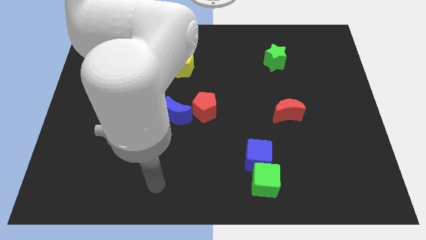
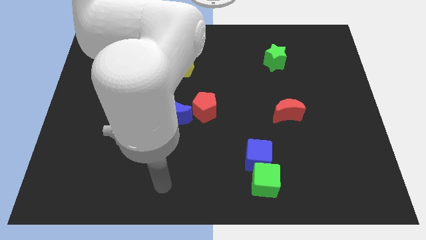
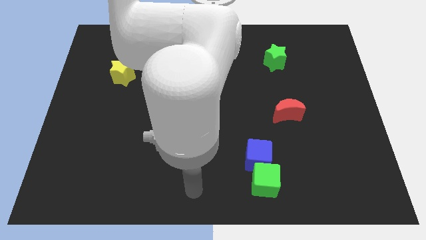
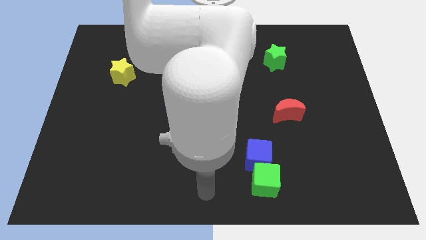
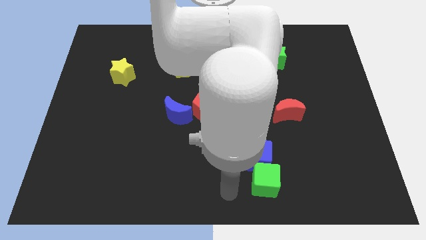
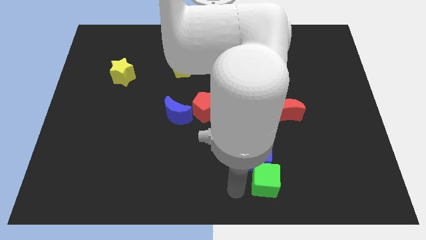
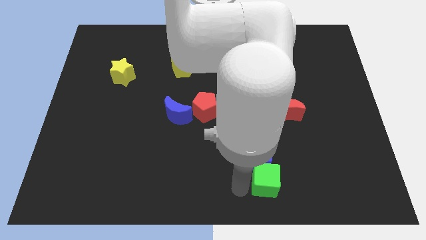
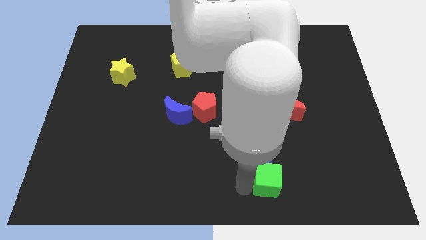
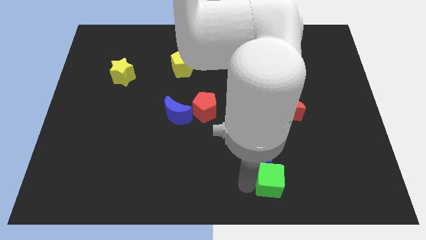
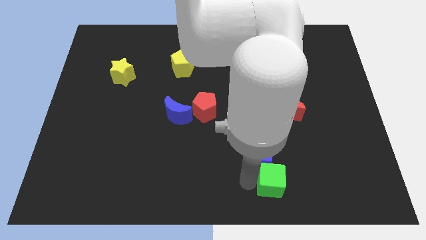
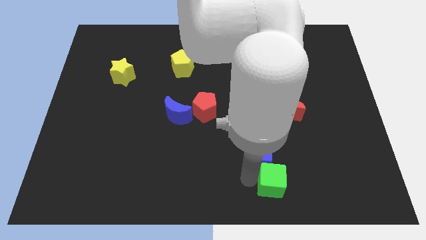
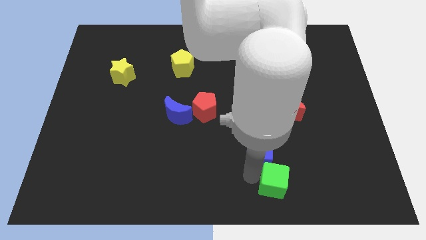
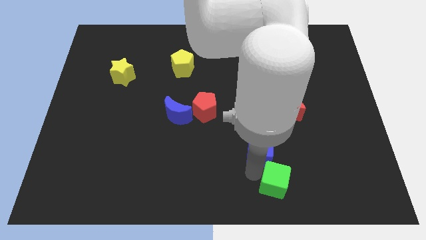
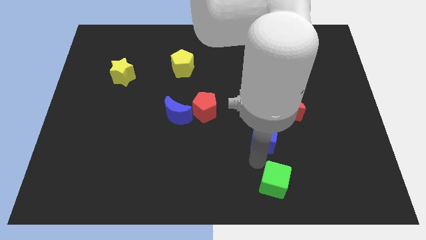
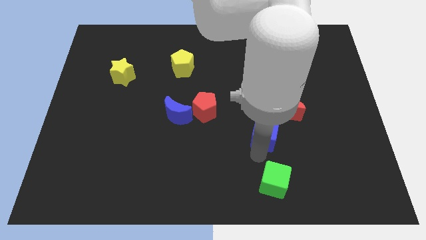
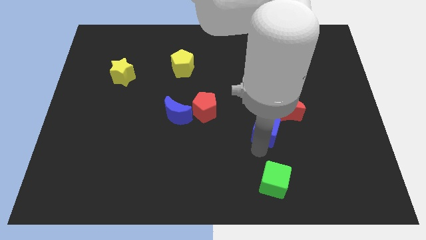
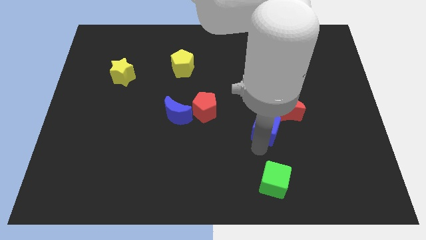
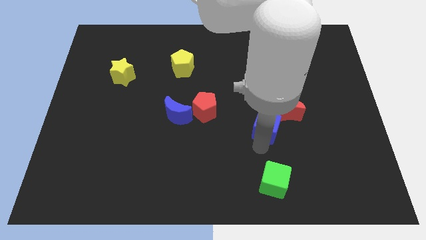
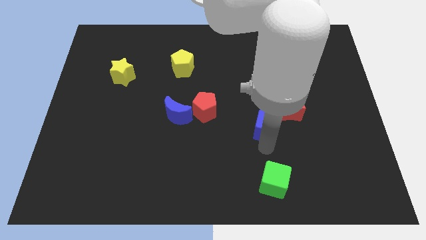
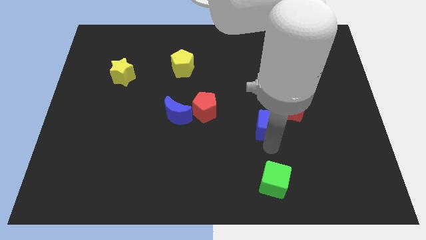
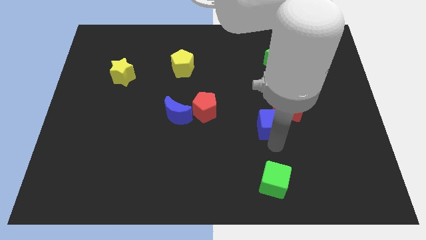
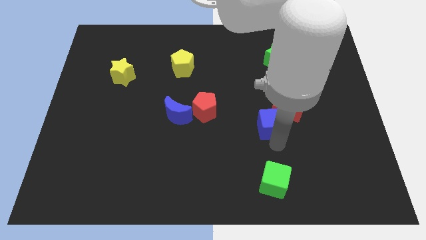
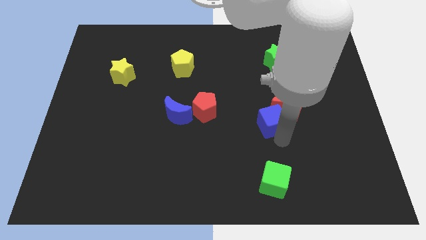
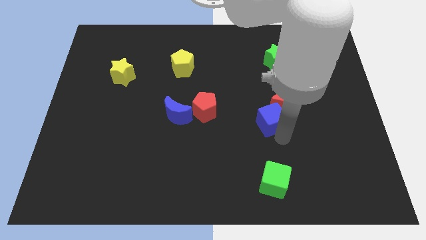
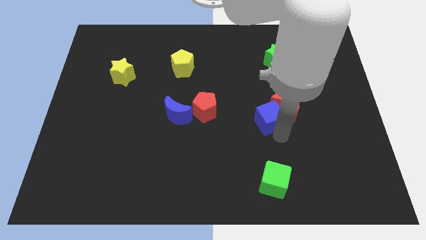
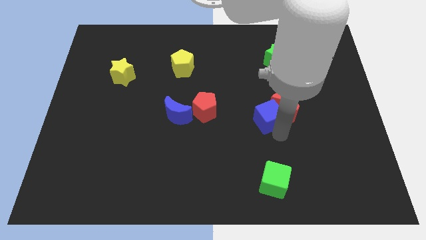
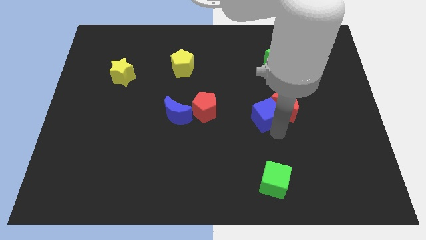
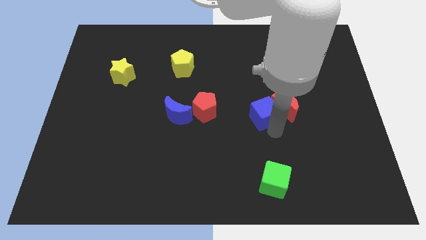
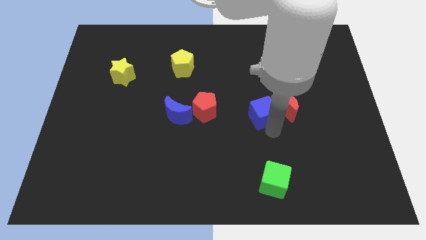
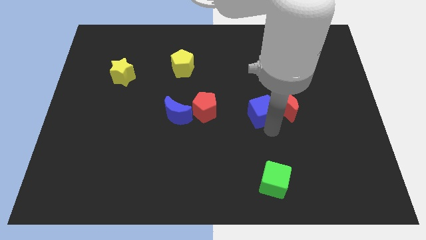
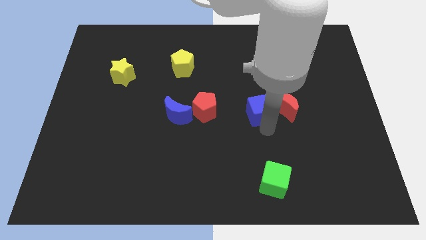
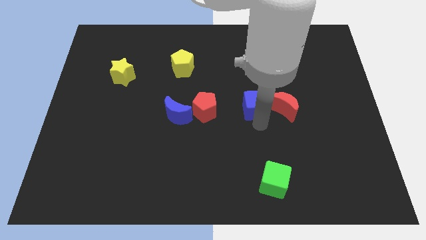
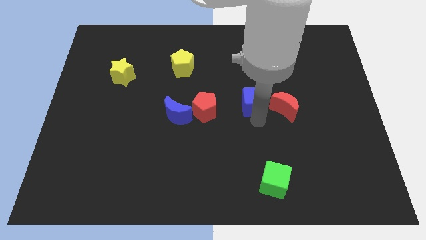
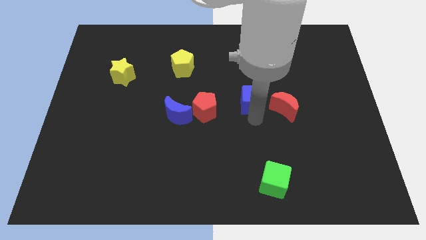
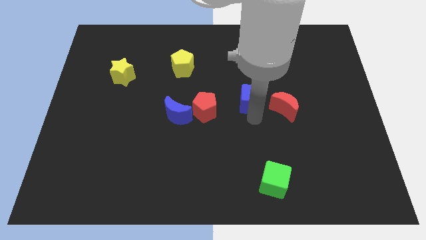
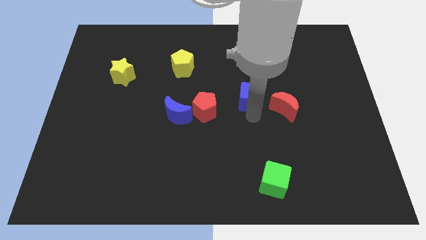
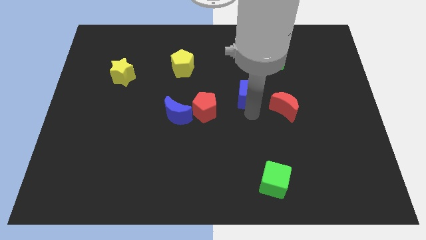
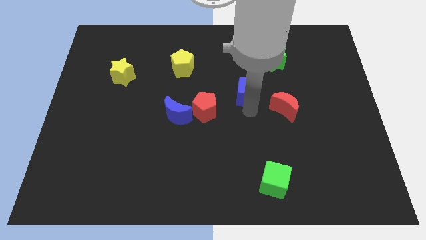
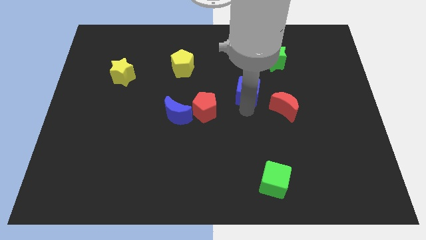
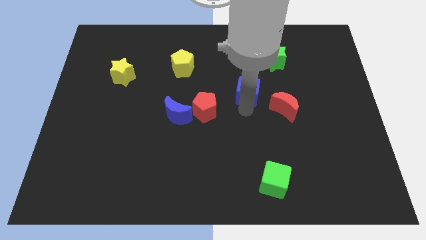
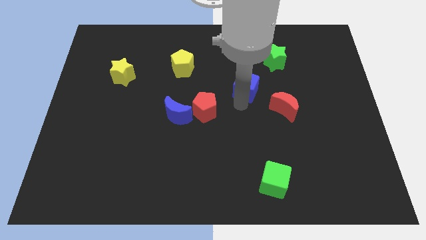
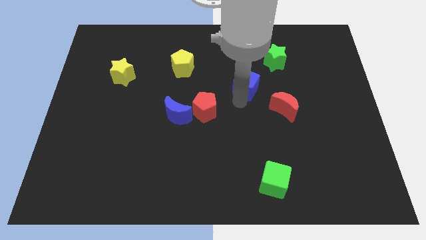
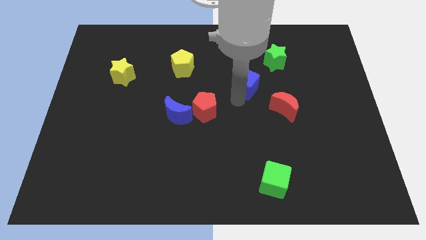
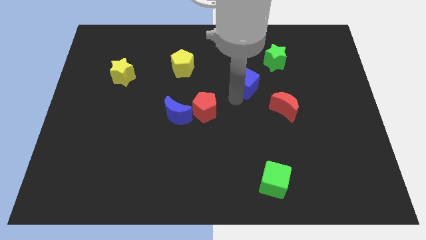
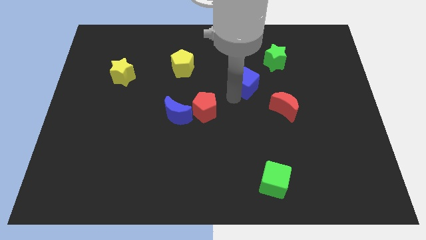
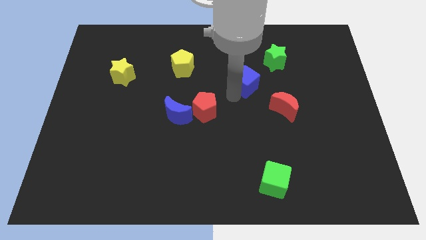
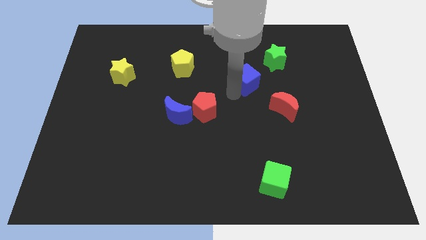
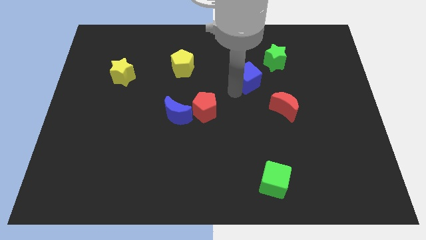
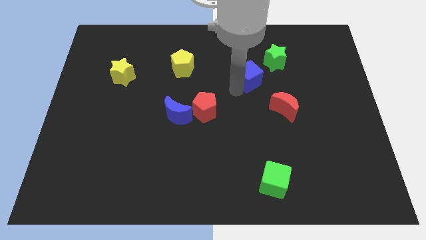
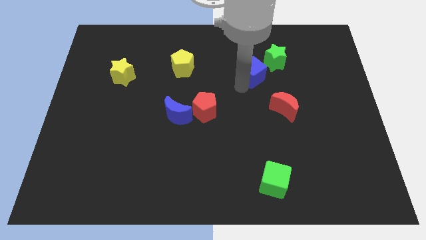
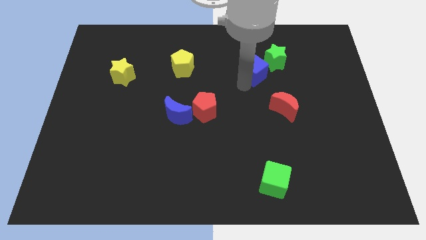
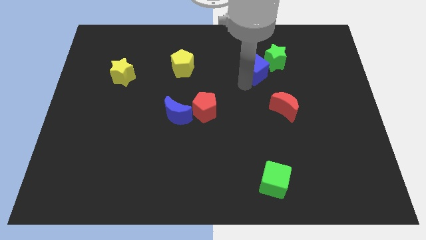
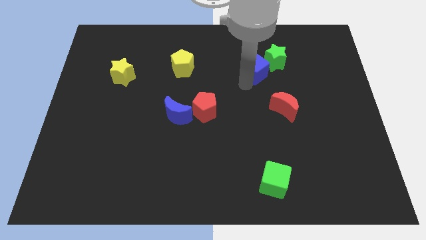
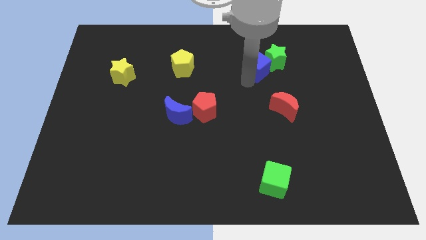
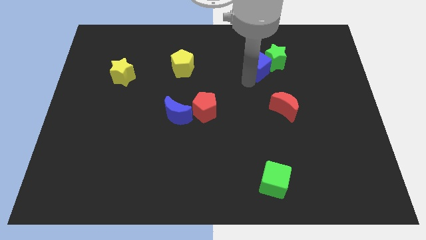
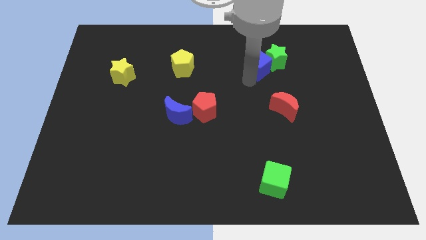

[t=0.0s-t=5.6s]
put the blue cube to the green star

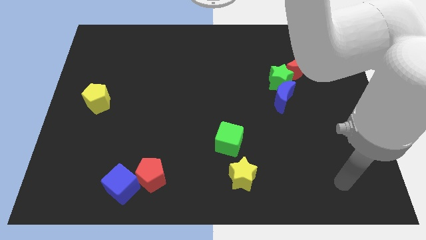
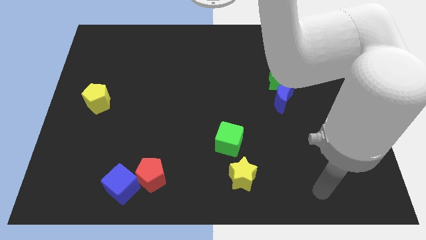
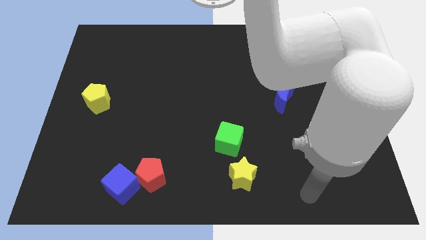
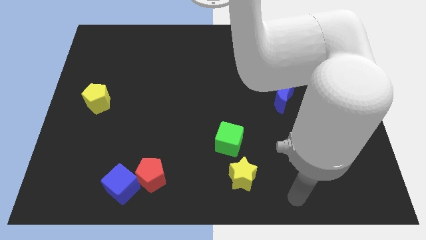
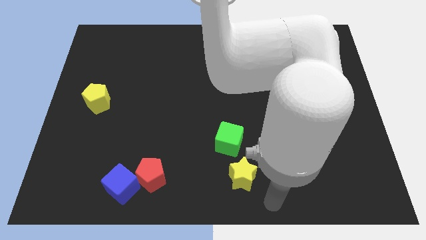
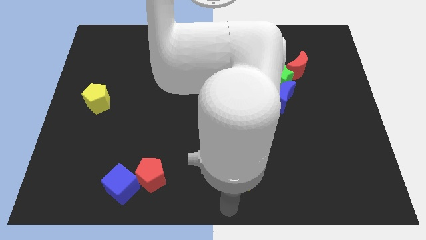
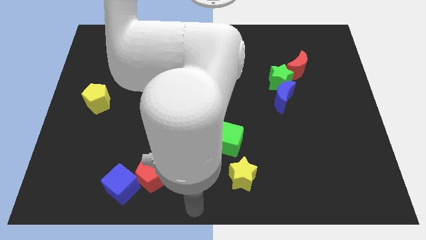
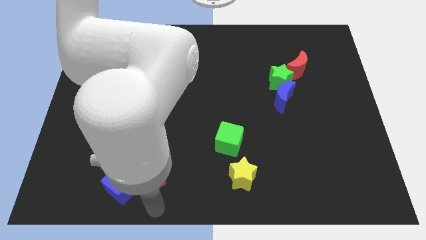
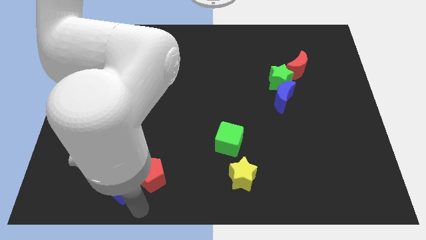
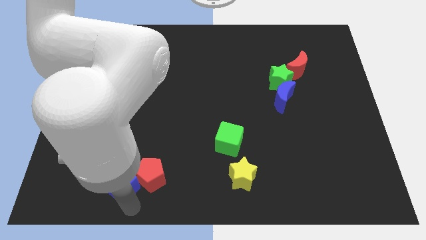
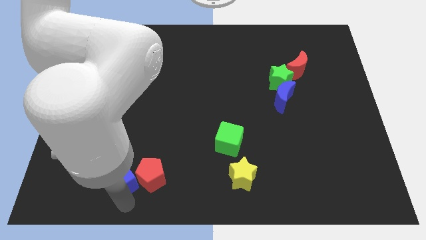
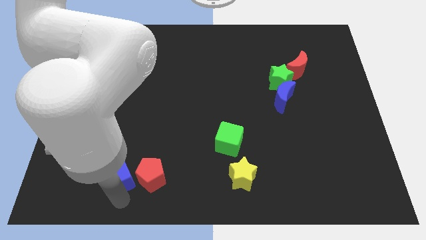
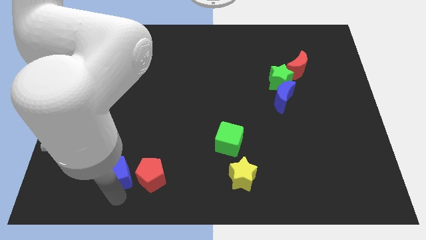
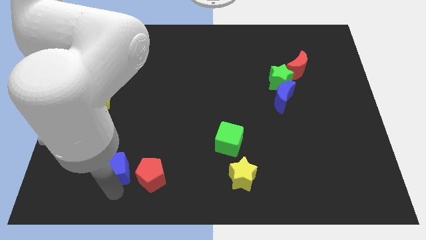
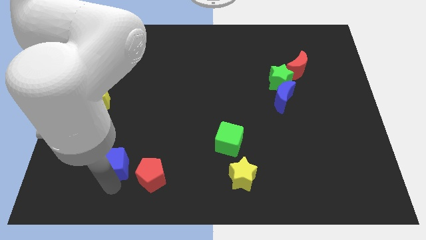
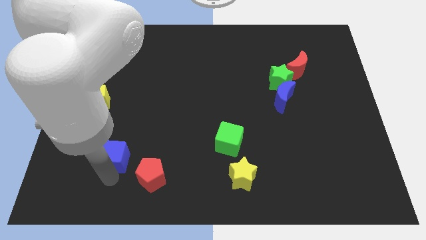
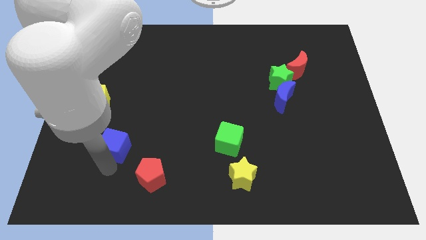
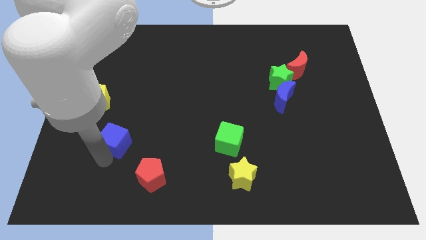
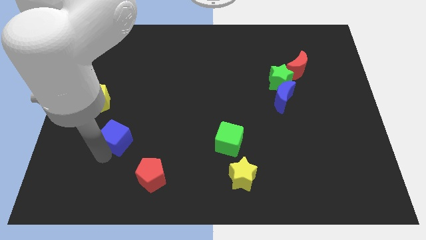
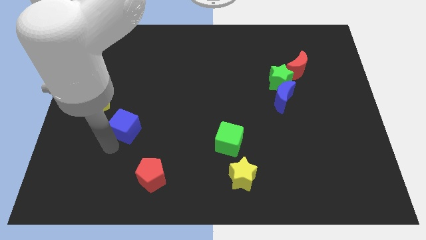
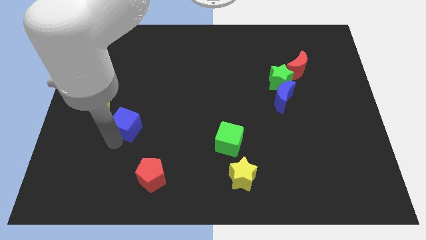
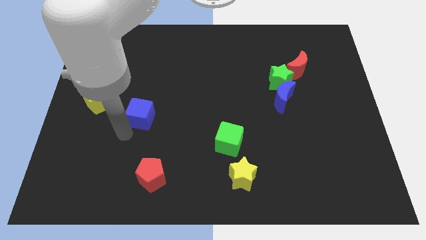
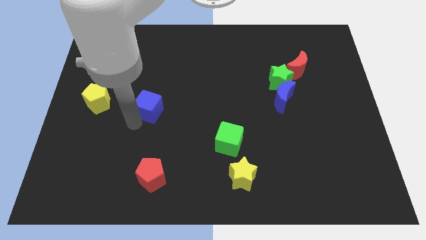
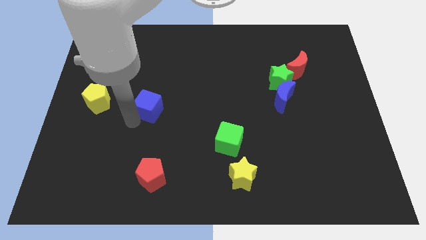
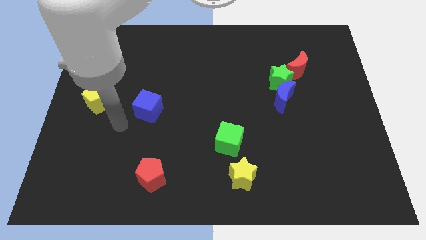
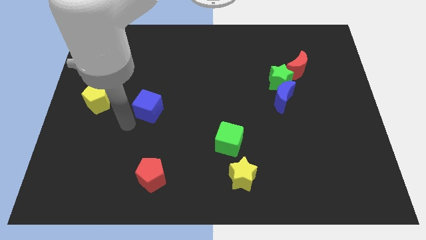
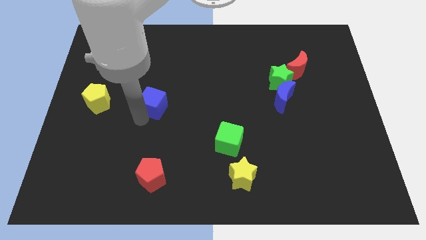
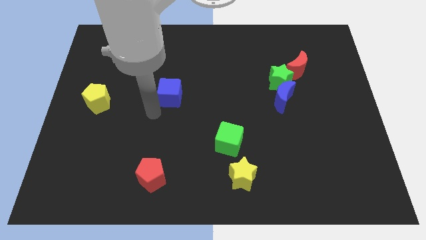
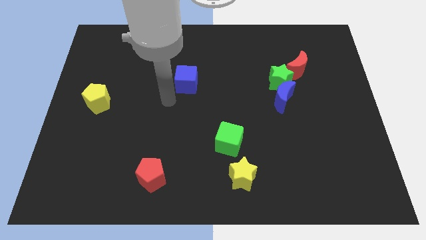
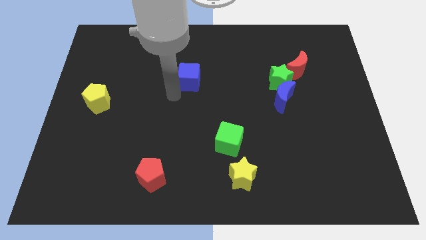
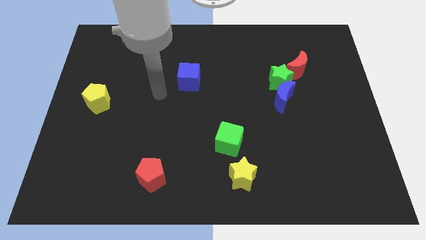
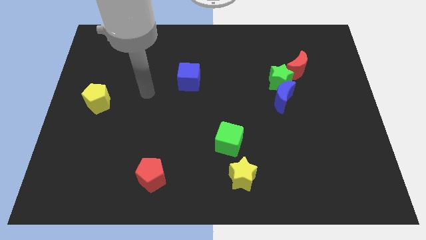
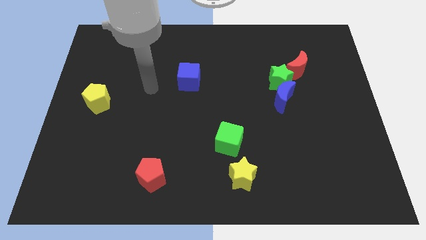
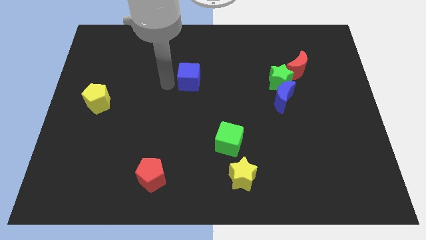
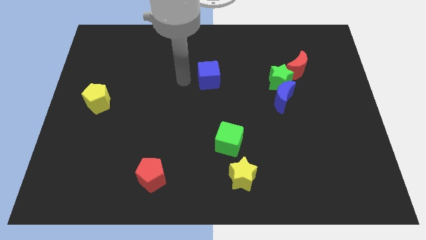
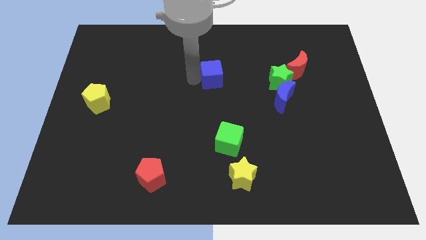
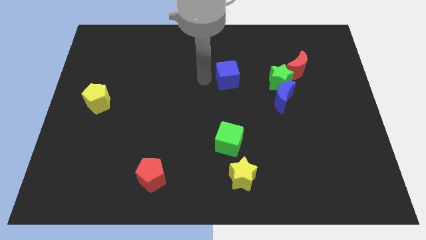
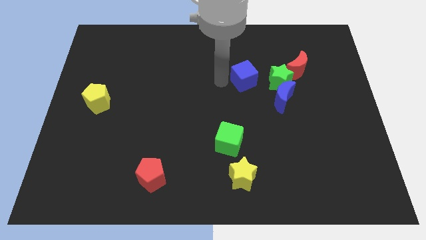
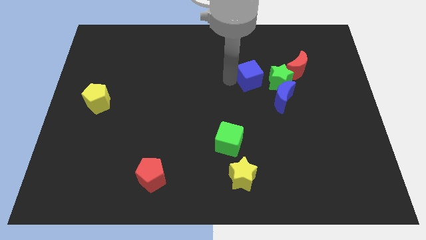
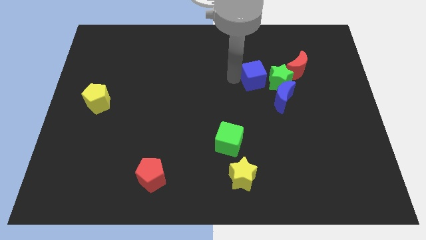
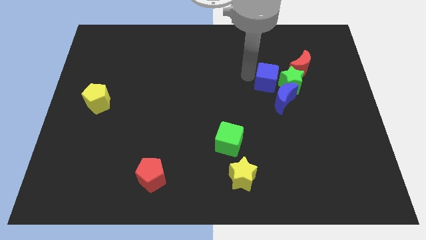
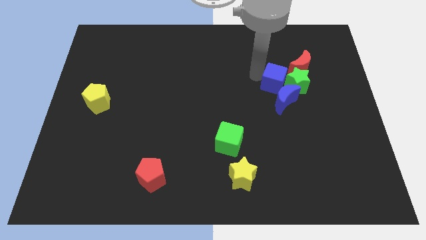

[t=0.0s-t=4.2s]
slide the blue cube next to the green star
